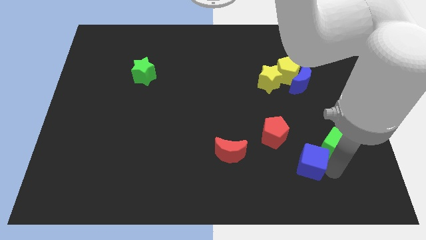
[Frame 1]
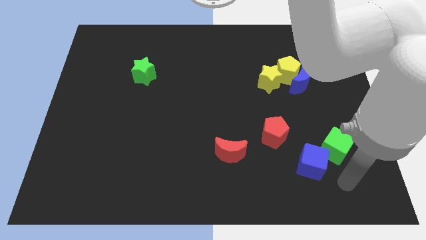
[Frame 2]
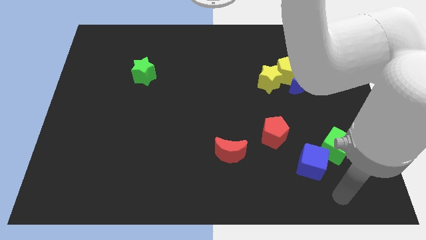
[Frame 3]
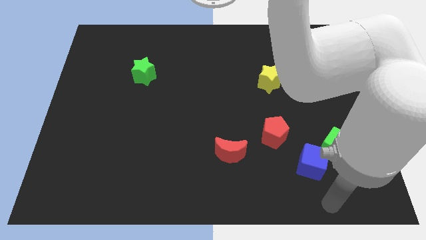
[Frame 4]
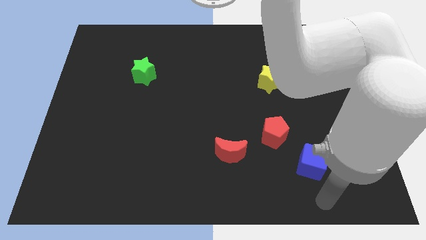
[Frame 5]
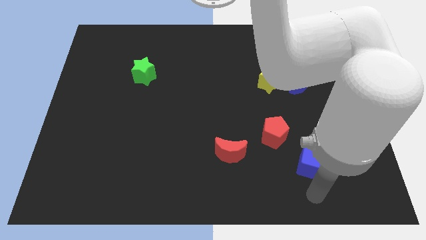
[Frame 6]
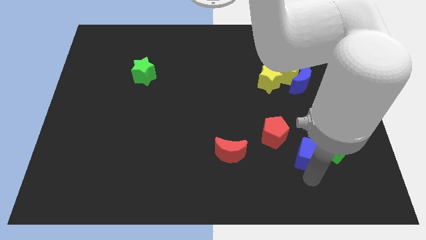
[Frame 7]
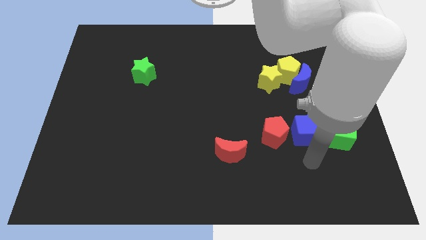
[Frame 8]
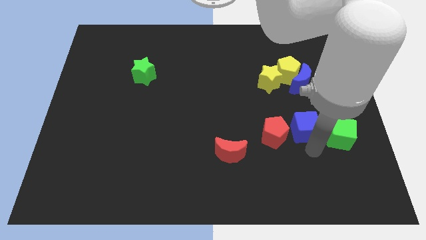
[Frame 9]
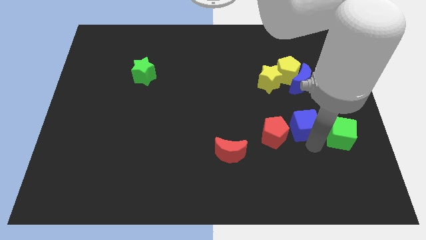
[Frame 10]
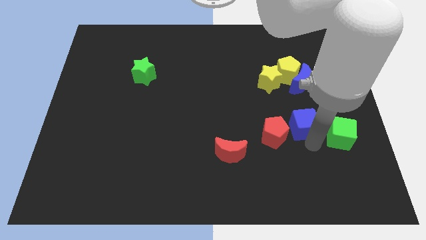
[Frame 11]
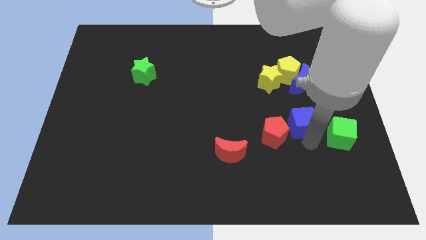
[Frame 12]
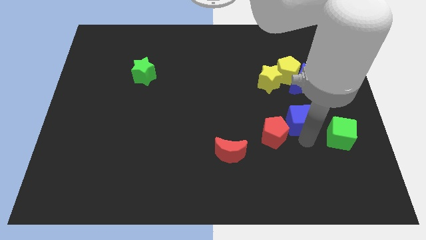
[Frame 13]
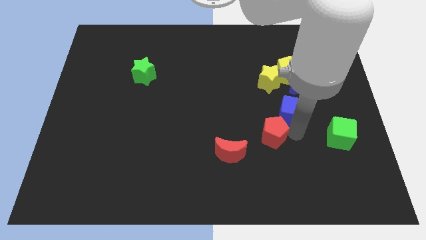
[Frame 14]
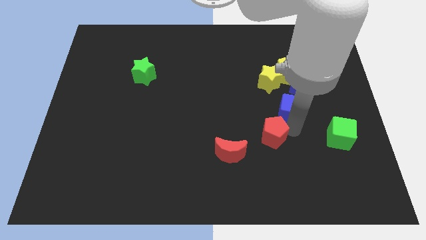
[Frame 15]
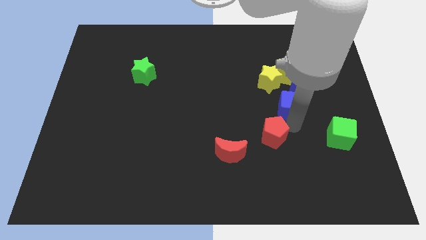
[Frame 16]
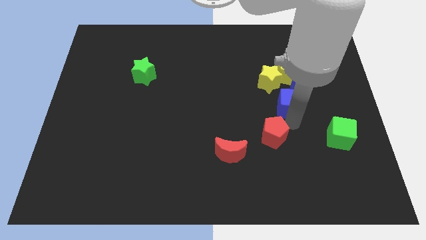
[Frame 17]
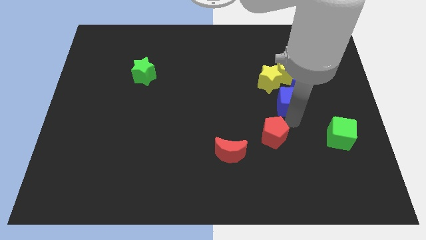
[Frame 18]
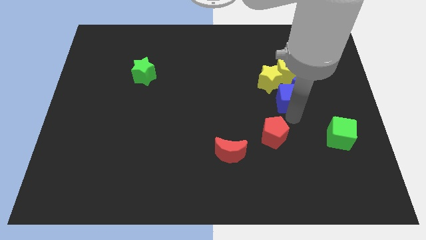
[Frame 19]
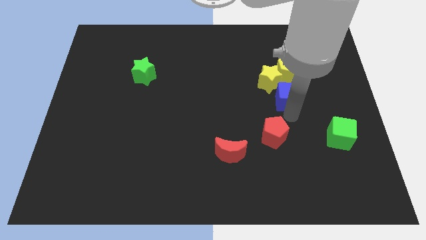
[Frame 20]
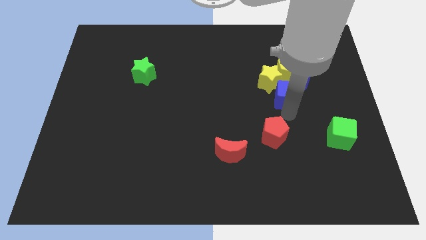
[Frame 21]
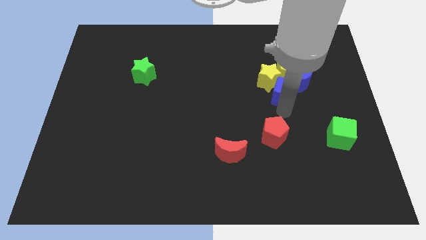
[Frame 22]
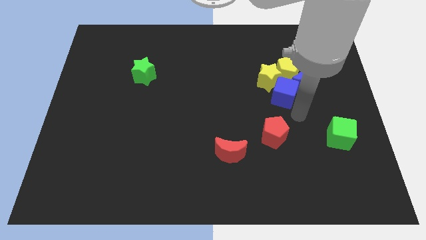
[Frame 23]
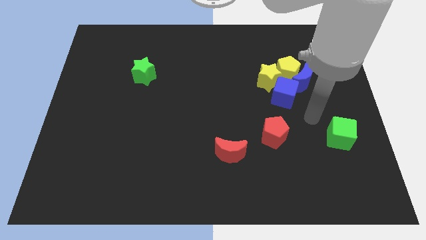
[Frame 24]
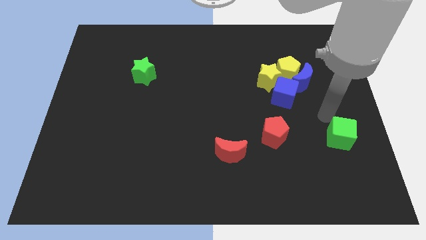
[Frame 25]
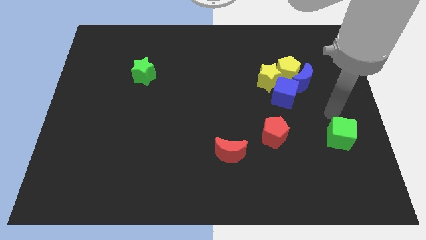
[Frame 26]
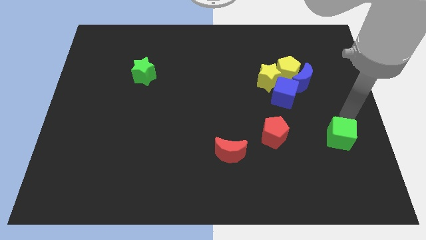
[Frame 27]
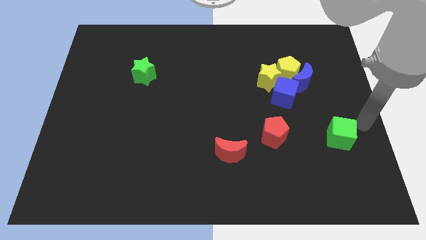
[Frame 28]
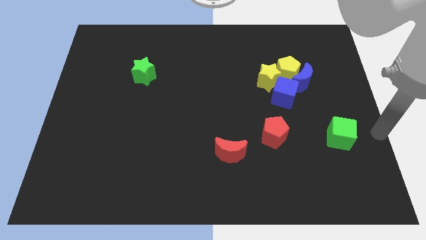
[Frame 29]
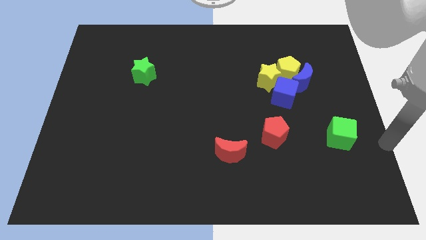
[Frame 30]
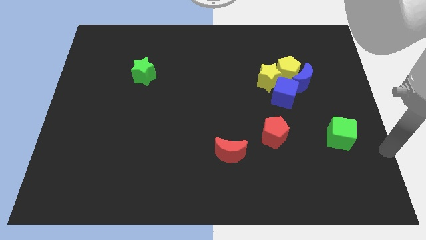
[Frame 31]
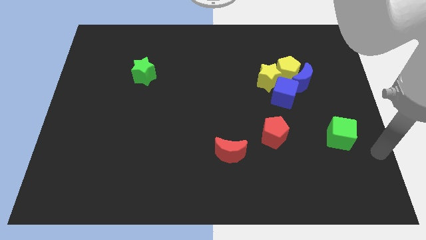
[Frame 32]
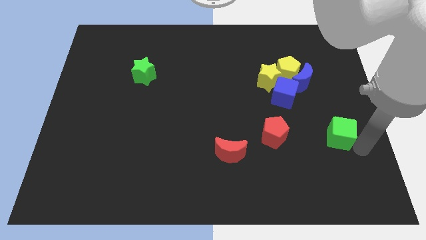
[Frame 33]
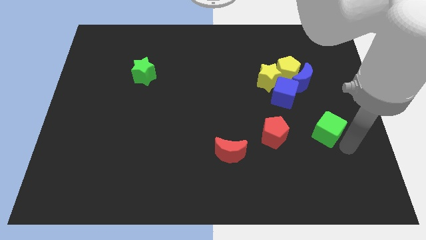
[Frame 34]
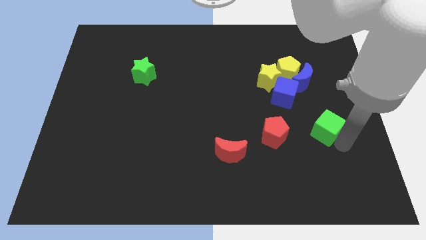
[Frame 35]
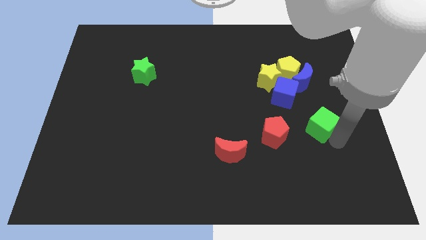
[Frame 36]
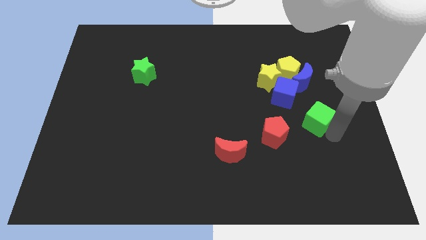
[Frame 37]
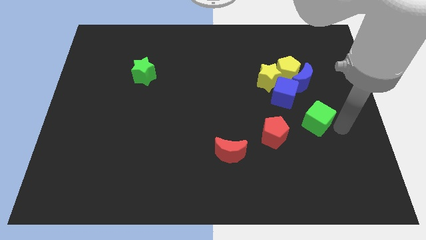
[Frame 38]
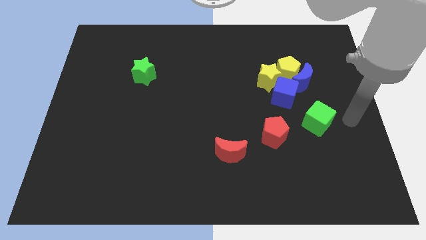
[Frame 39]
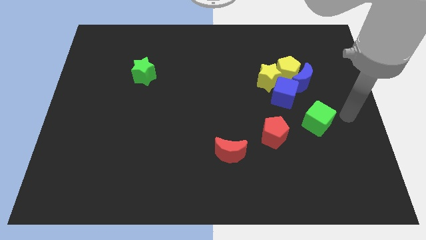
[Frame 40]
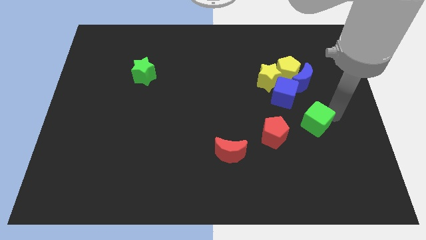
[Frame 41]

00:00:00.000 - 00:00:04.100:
place the blue cube into the yellow star

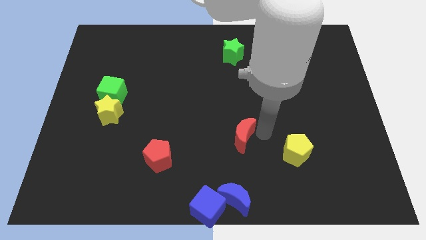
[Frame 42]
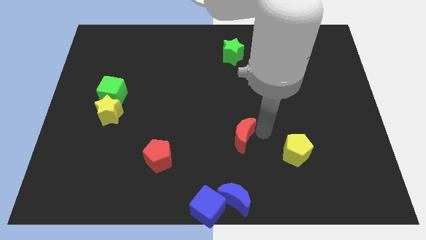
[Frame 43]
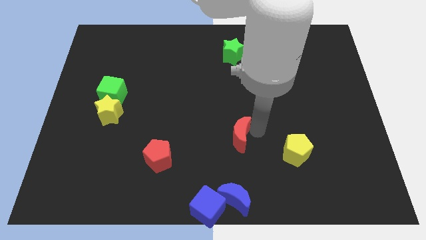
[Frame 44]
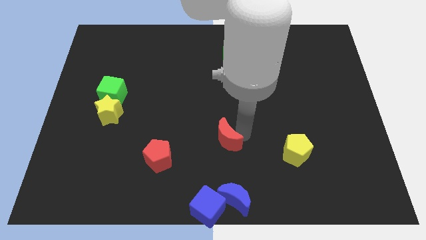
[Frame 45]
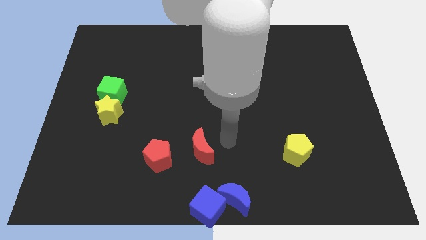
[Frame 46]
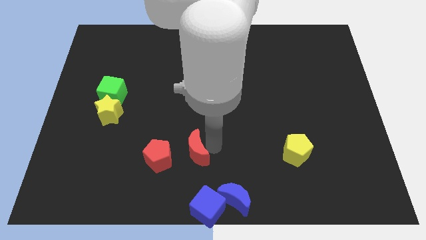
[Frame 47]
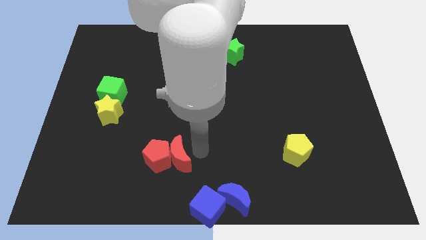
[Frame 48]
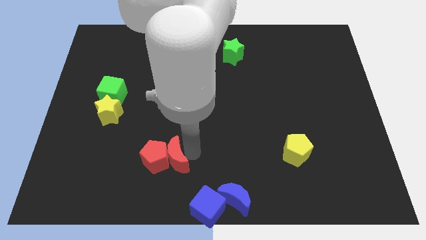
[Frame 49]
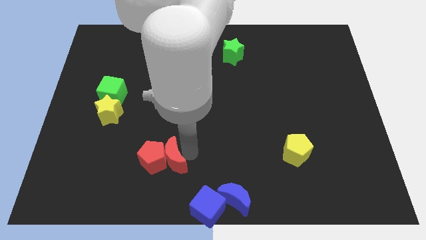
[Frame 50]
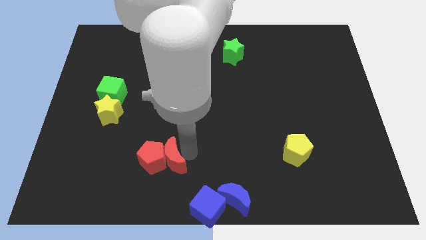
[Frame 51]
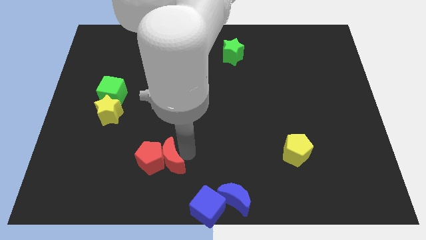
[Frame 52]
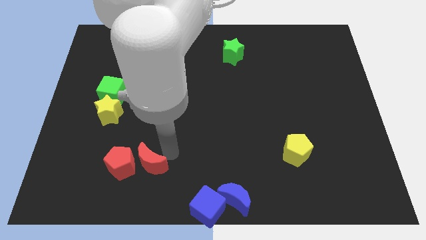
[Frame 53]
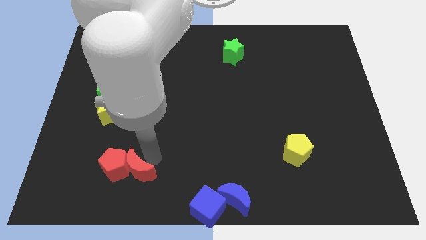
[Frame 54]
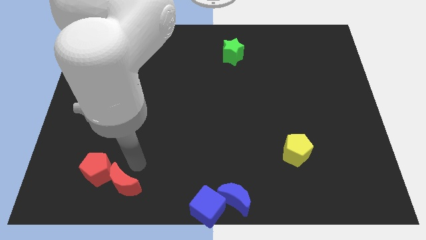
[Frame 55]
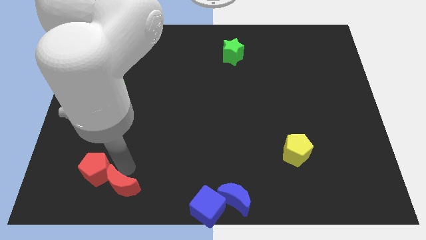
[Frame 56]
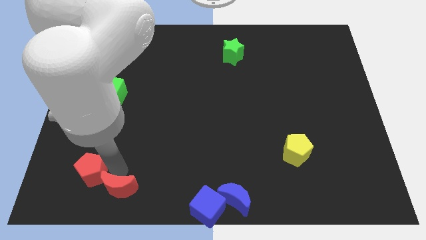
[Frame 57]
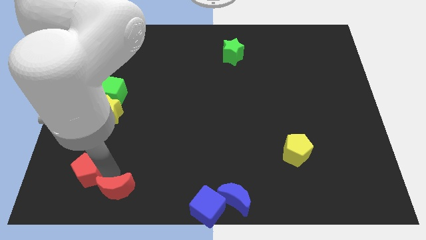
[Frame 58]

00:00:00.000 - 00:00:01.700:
put the red moon and red pentagon together

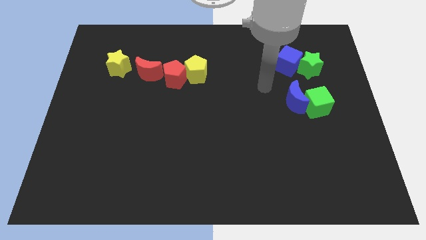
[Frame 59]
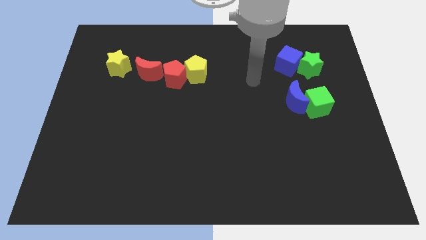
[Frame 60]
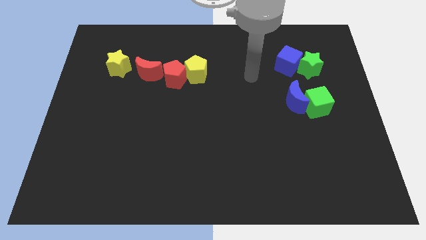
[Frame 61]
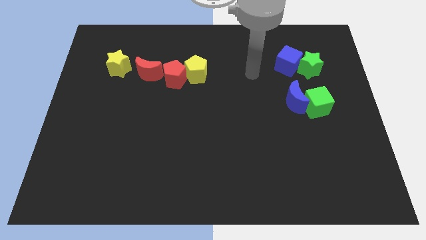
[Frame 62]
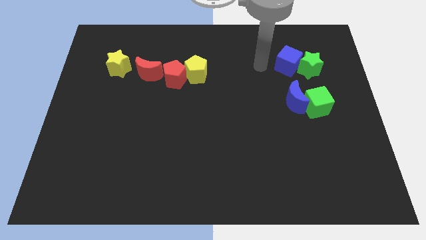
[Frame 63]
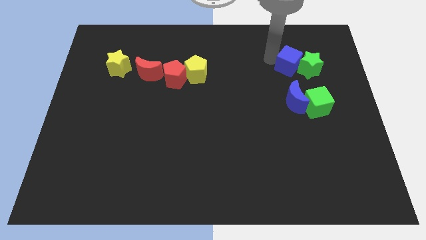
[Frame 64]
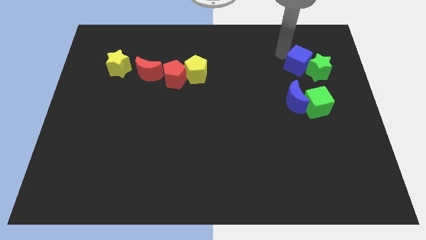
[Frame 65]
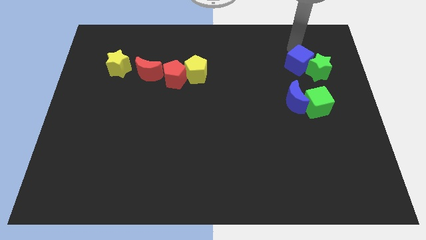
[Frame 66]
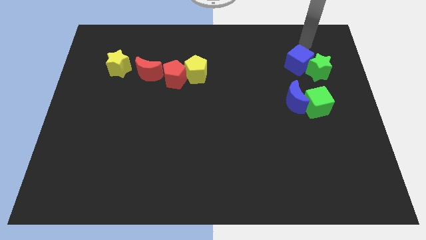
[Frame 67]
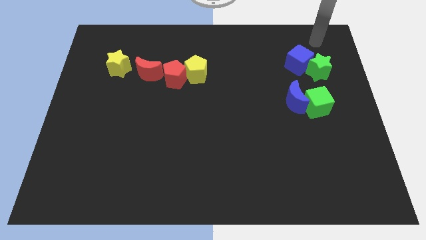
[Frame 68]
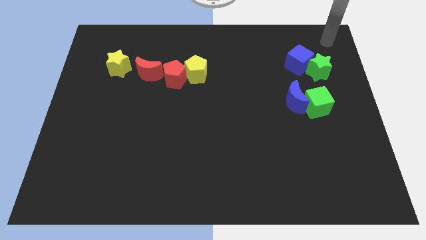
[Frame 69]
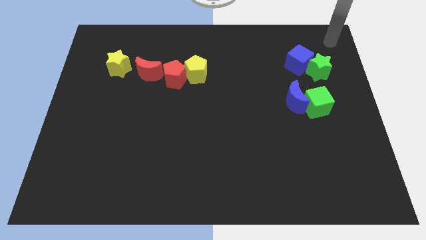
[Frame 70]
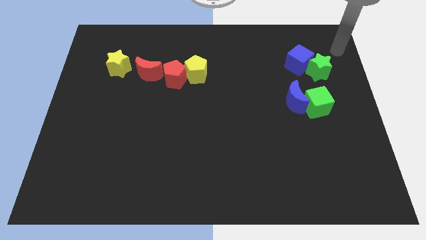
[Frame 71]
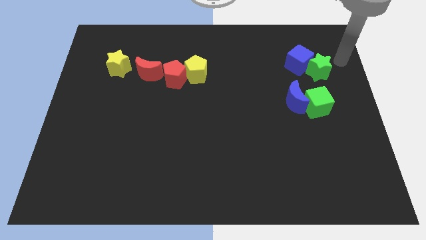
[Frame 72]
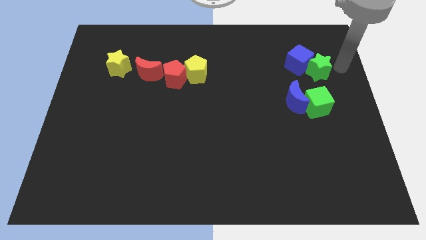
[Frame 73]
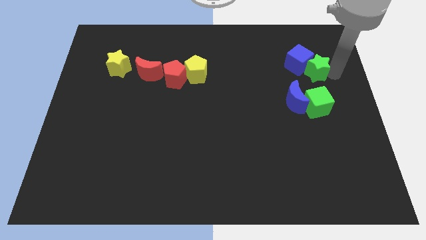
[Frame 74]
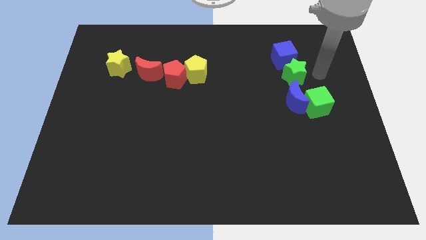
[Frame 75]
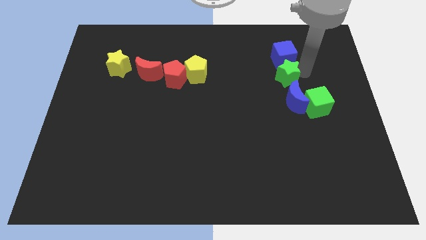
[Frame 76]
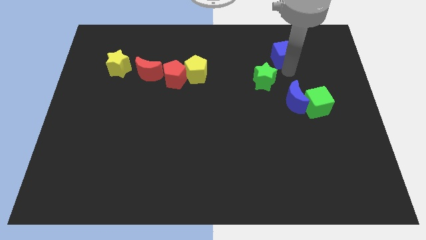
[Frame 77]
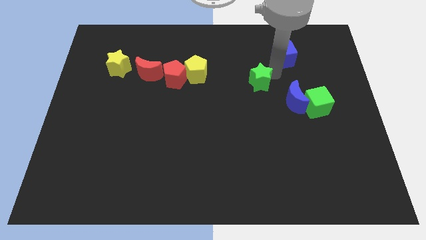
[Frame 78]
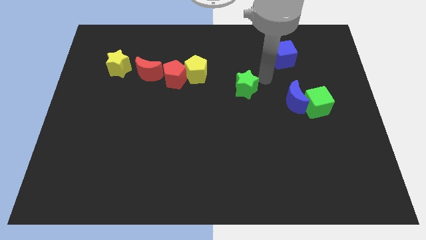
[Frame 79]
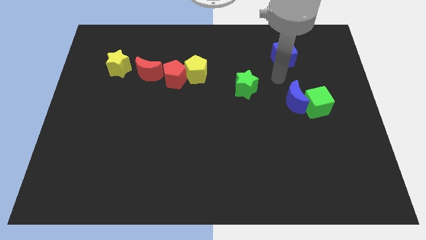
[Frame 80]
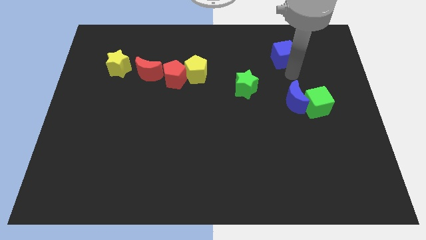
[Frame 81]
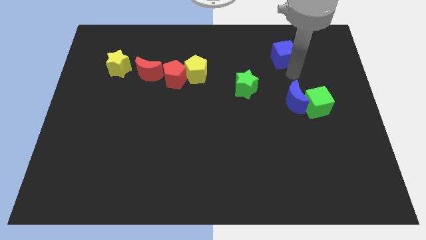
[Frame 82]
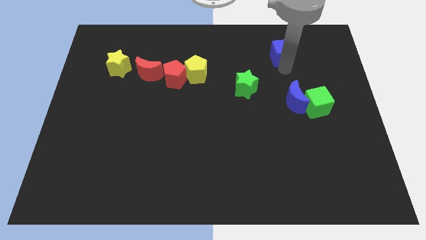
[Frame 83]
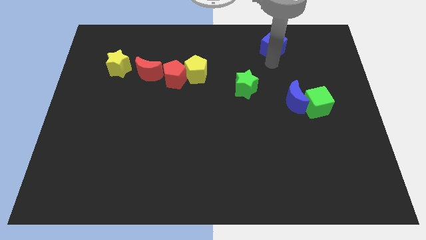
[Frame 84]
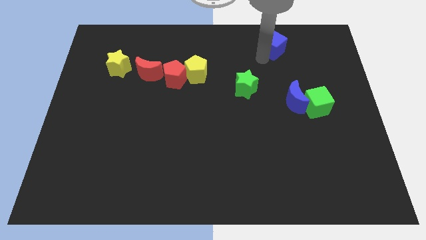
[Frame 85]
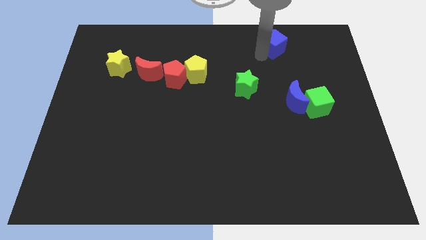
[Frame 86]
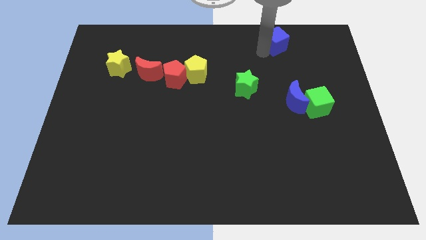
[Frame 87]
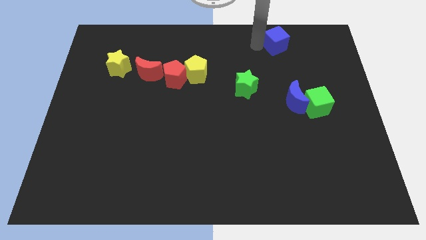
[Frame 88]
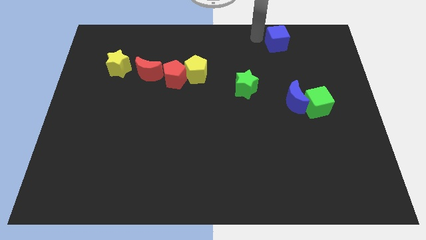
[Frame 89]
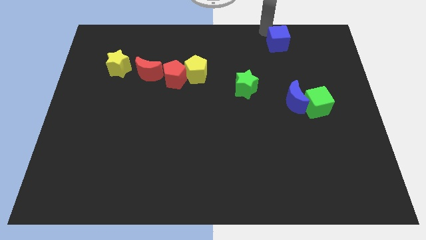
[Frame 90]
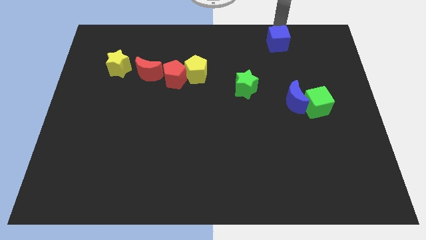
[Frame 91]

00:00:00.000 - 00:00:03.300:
separate green star from the blue cube
